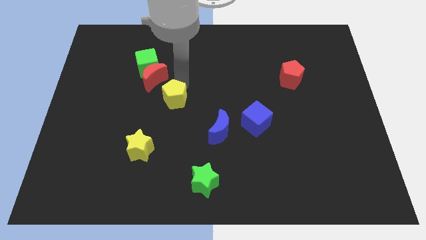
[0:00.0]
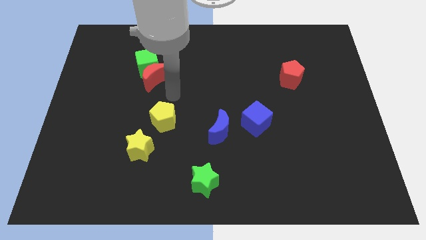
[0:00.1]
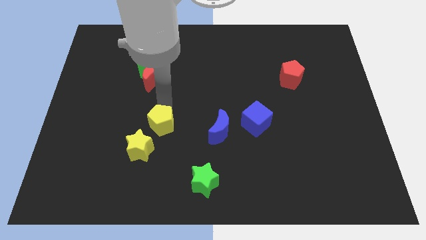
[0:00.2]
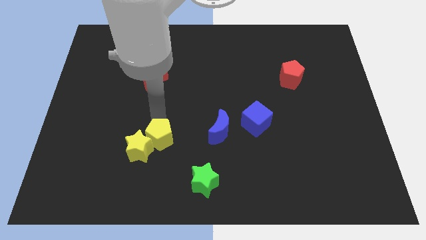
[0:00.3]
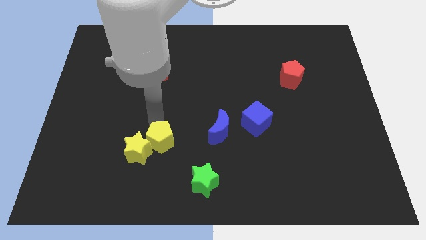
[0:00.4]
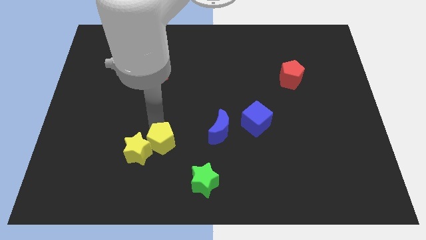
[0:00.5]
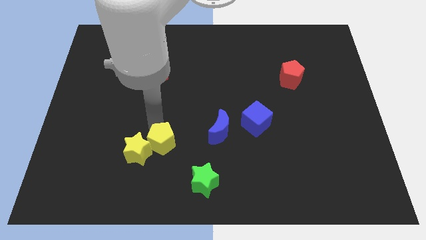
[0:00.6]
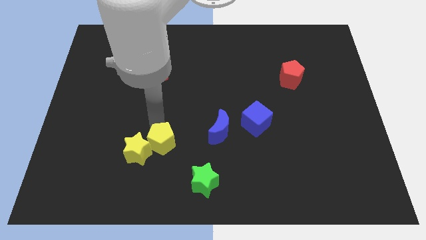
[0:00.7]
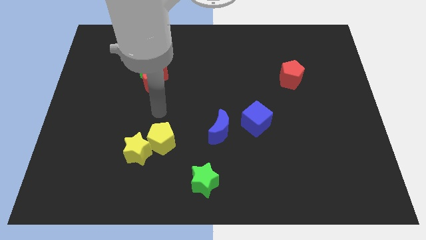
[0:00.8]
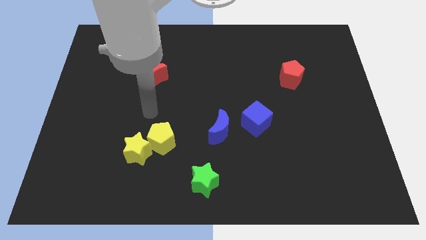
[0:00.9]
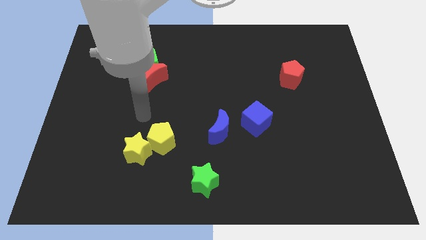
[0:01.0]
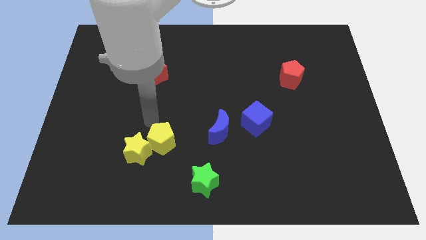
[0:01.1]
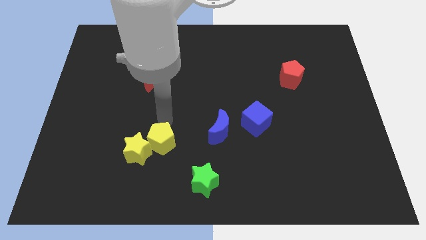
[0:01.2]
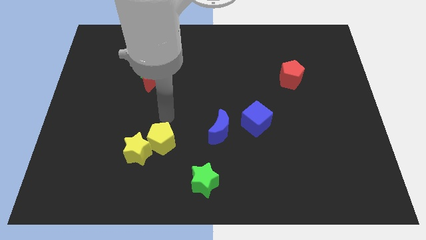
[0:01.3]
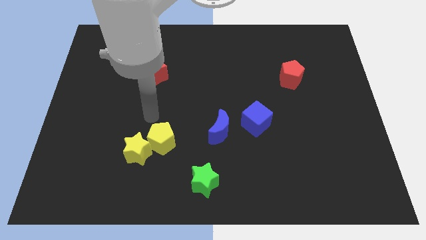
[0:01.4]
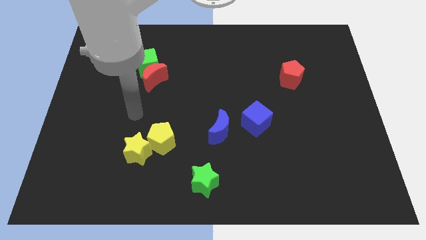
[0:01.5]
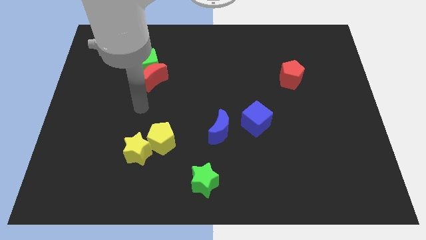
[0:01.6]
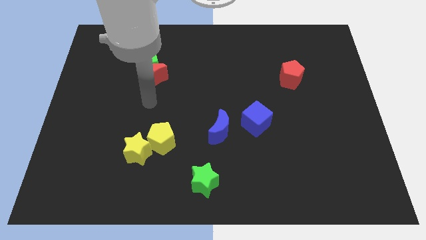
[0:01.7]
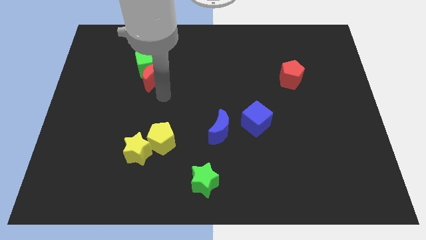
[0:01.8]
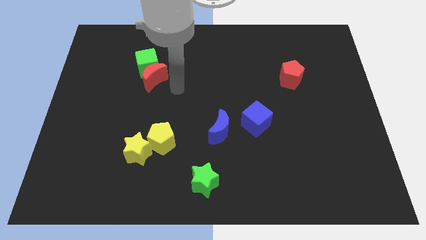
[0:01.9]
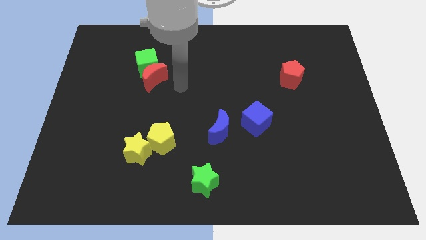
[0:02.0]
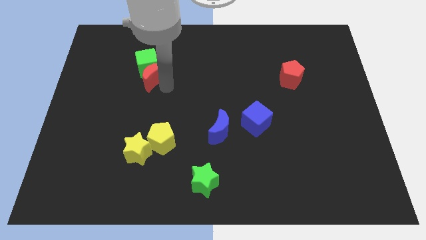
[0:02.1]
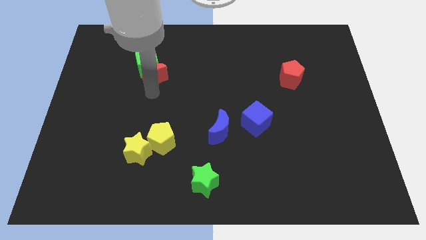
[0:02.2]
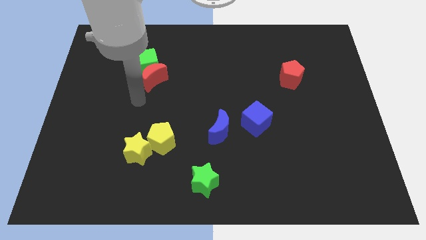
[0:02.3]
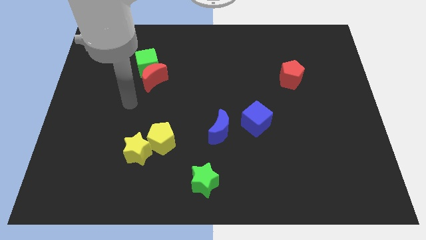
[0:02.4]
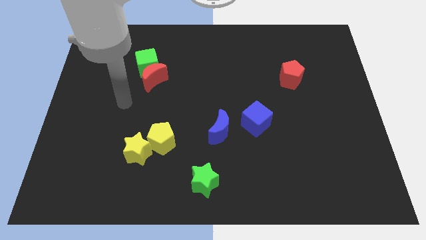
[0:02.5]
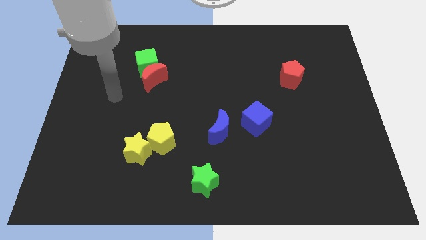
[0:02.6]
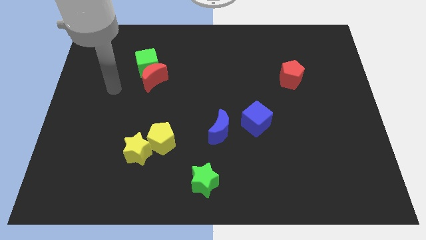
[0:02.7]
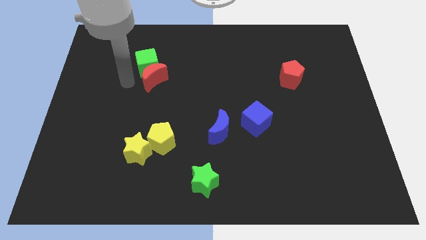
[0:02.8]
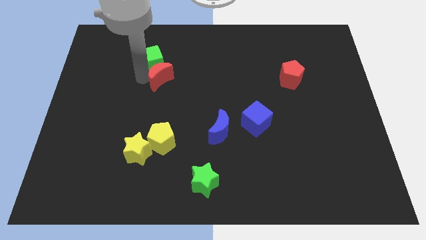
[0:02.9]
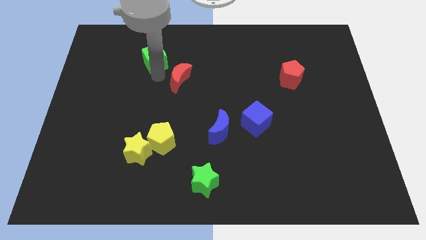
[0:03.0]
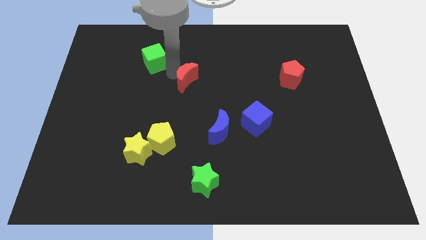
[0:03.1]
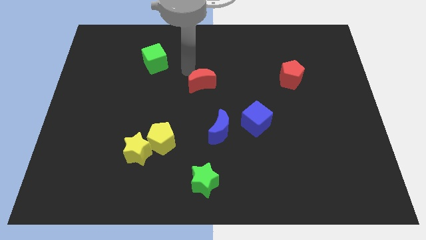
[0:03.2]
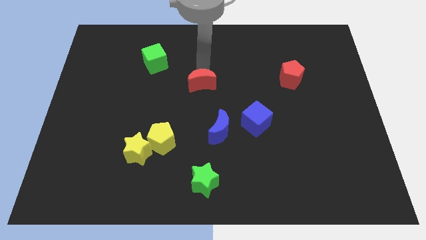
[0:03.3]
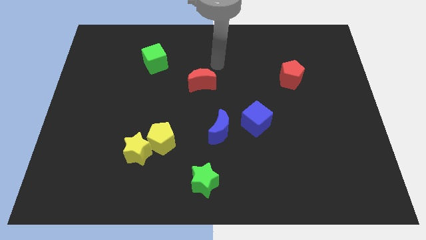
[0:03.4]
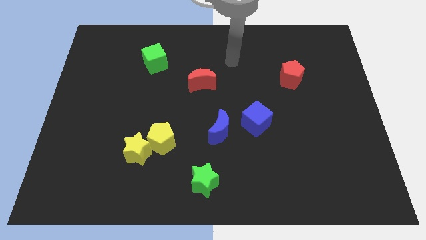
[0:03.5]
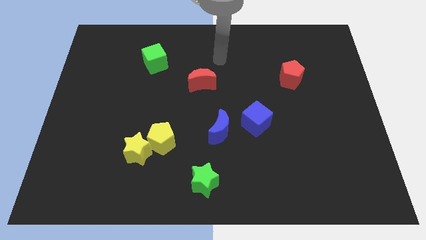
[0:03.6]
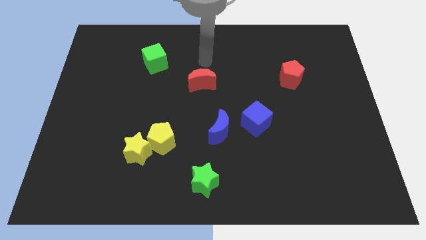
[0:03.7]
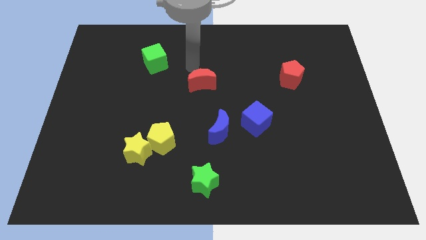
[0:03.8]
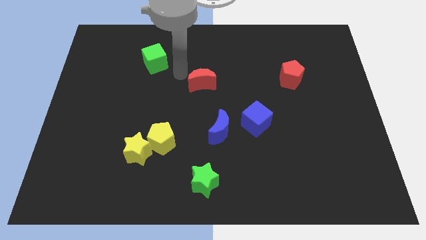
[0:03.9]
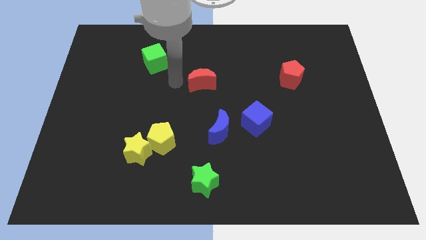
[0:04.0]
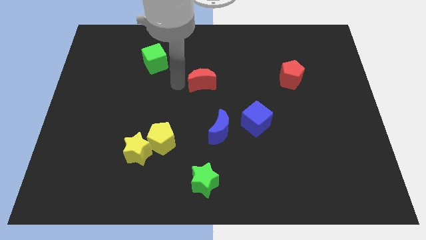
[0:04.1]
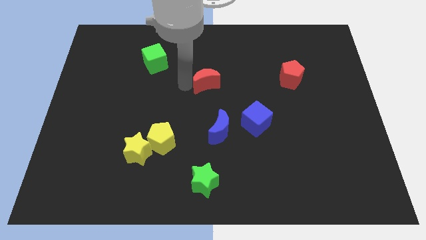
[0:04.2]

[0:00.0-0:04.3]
separate red moon from green cube

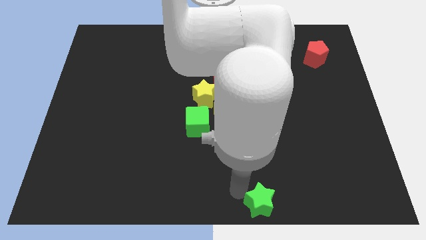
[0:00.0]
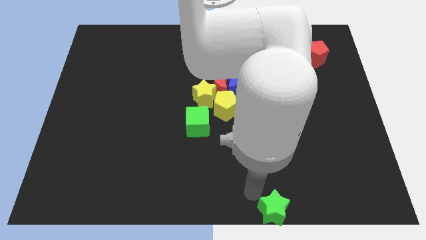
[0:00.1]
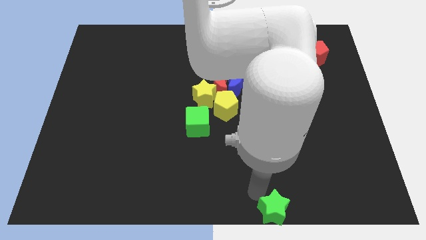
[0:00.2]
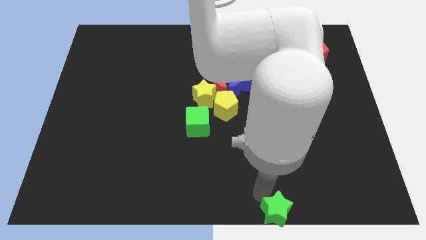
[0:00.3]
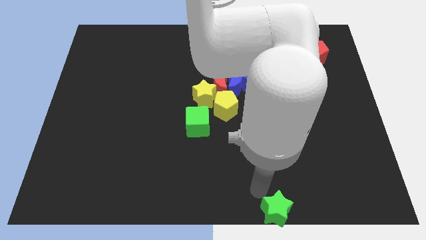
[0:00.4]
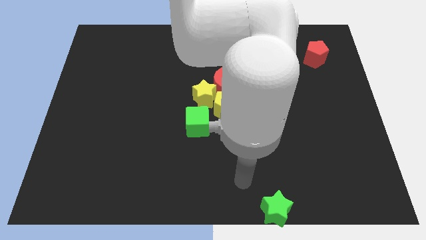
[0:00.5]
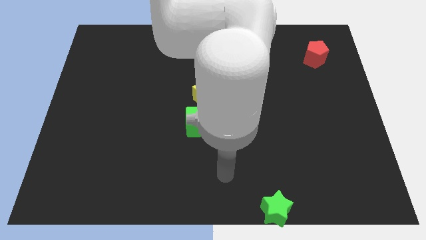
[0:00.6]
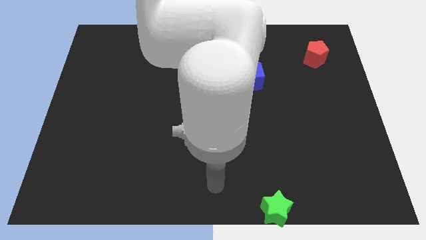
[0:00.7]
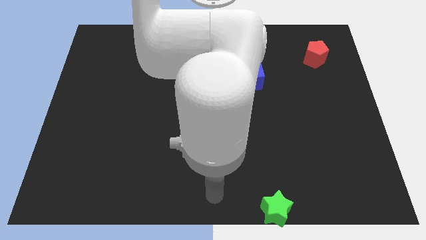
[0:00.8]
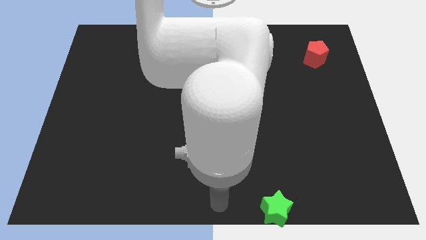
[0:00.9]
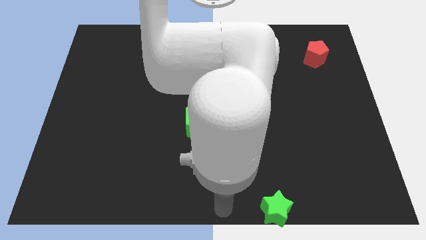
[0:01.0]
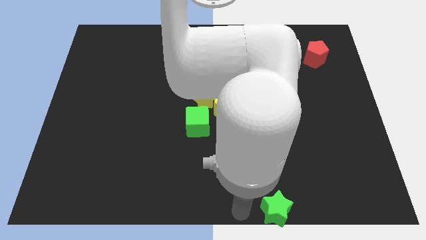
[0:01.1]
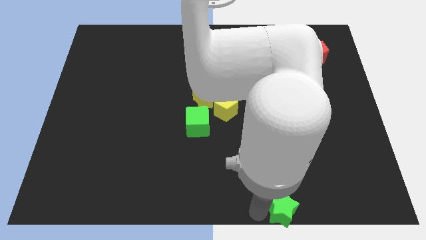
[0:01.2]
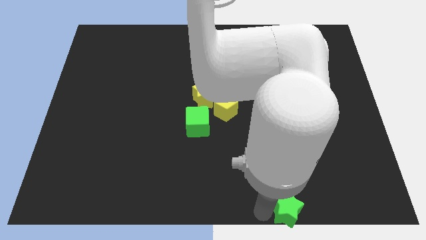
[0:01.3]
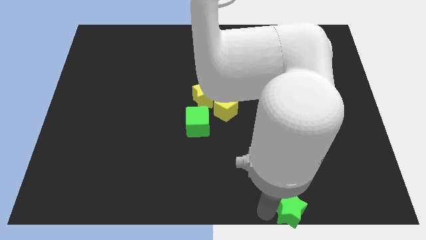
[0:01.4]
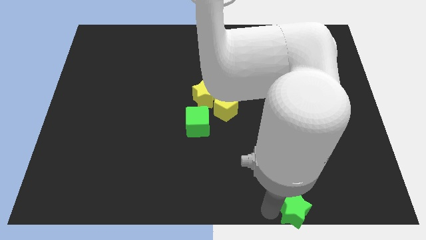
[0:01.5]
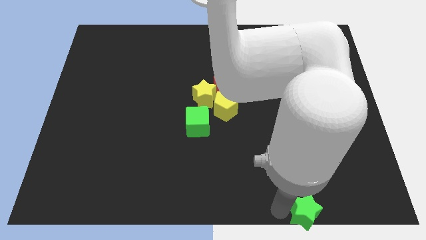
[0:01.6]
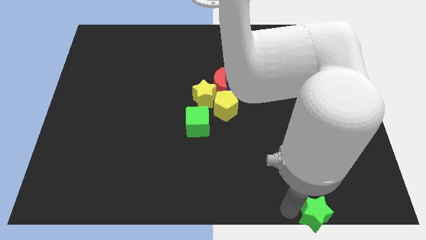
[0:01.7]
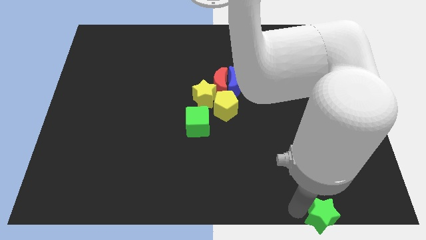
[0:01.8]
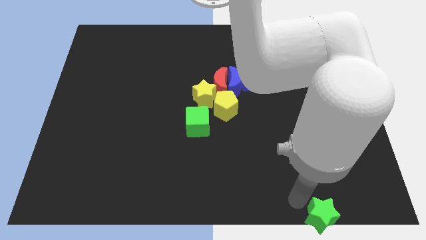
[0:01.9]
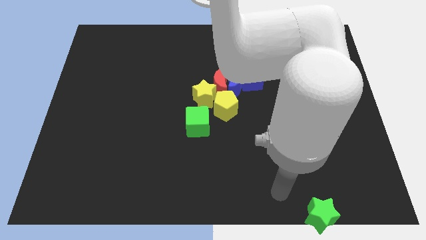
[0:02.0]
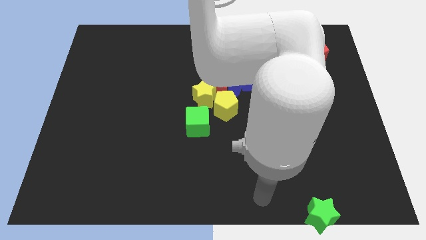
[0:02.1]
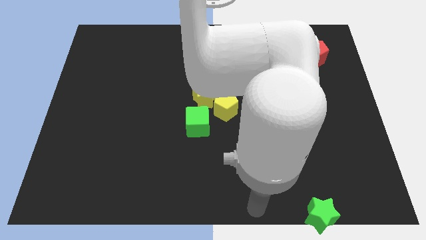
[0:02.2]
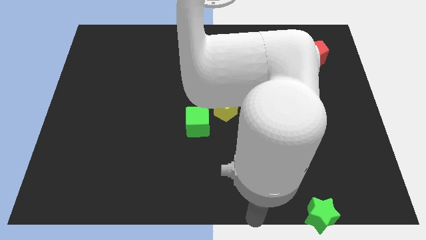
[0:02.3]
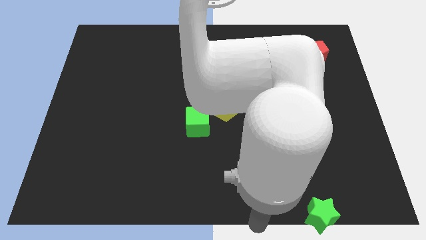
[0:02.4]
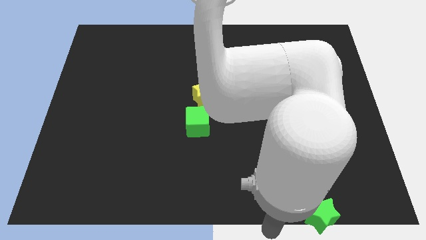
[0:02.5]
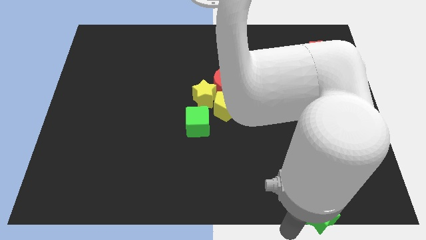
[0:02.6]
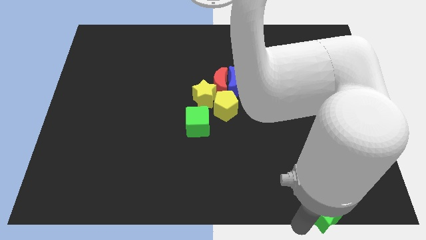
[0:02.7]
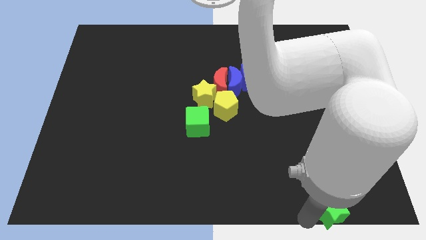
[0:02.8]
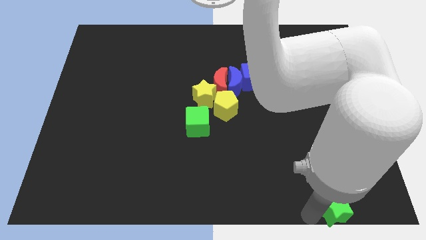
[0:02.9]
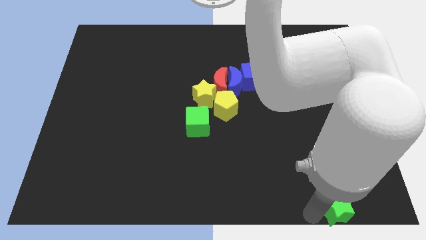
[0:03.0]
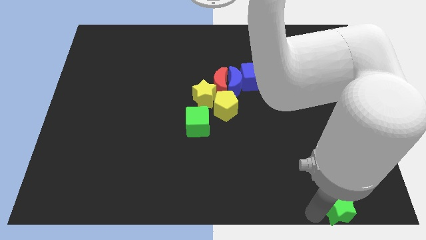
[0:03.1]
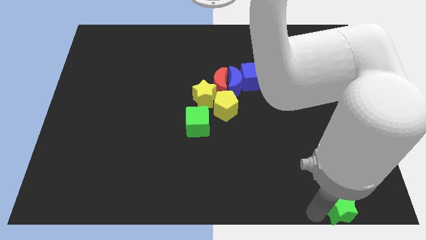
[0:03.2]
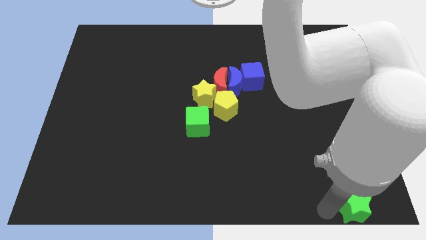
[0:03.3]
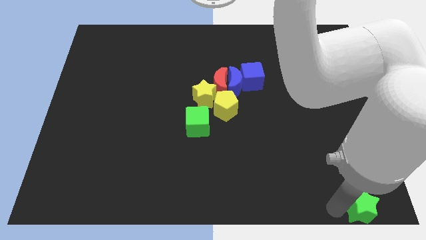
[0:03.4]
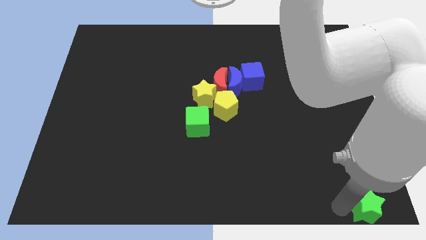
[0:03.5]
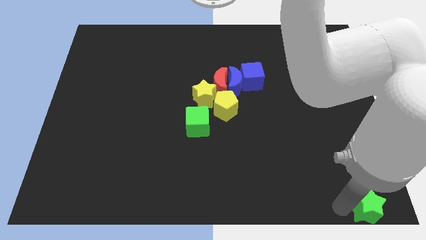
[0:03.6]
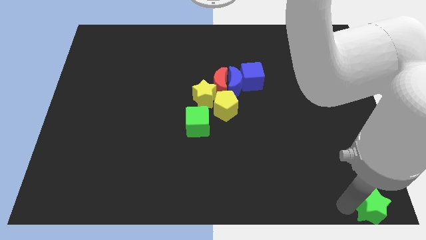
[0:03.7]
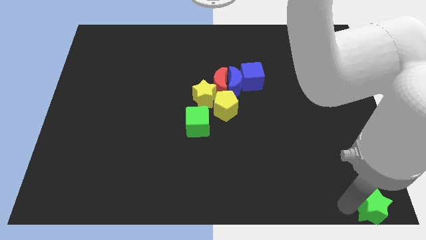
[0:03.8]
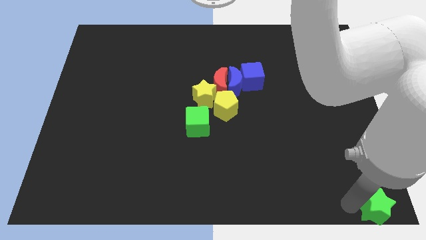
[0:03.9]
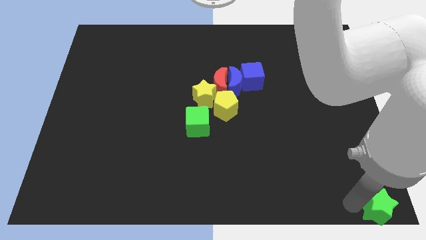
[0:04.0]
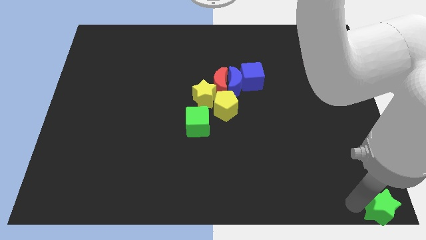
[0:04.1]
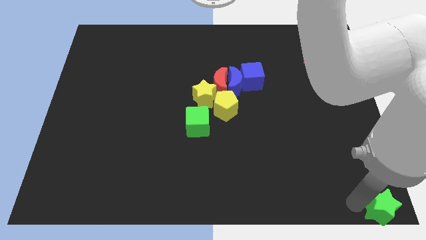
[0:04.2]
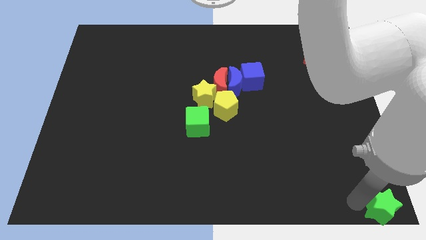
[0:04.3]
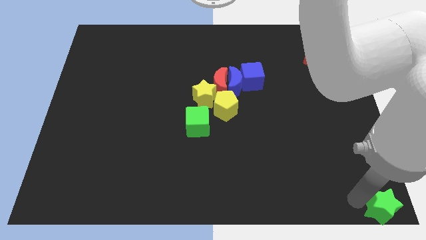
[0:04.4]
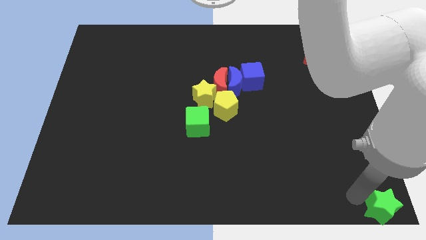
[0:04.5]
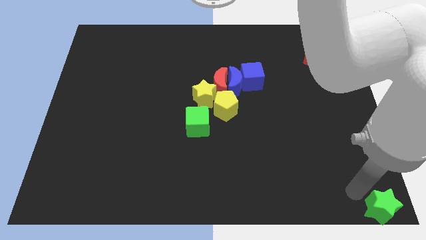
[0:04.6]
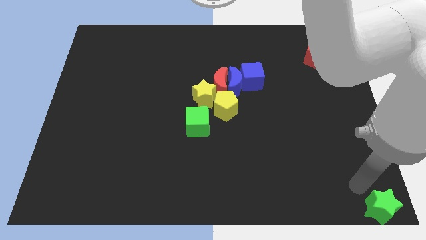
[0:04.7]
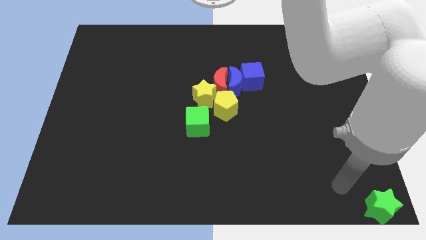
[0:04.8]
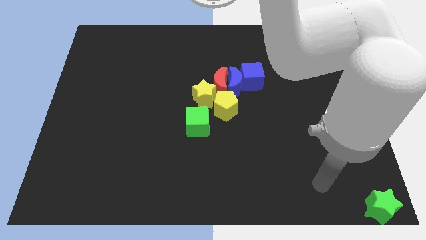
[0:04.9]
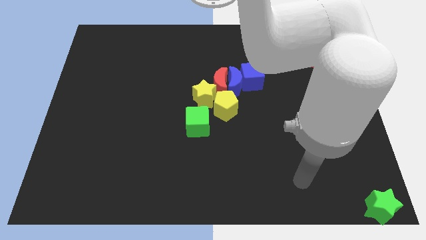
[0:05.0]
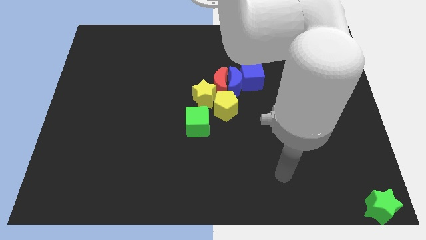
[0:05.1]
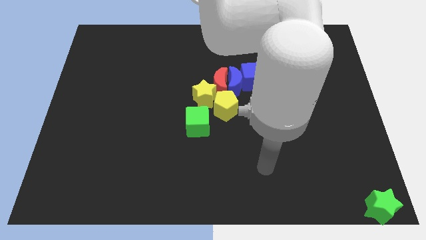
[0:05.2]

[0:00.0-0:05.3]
push the green star to the bottom right of the board
